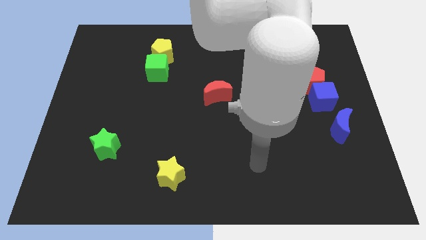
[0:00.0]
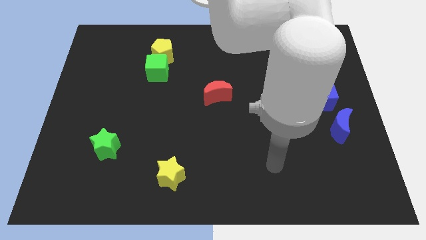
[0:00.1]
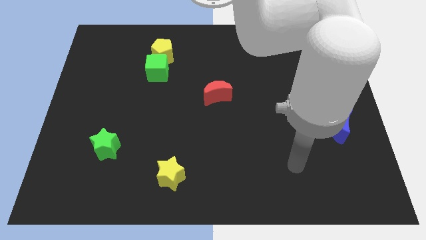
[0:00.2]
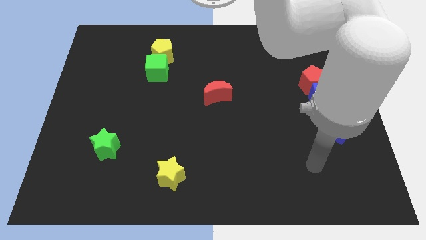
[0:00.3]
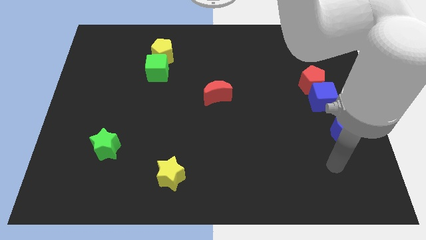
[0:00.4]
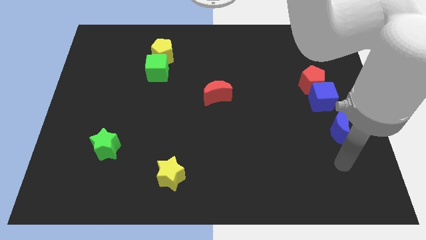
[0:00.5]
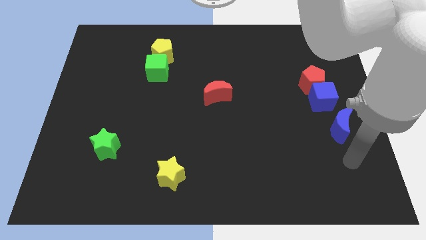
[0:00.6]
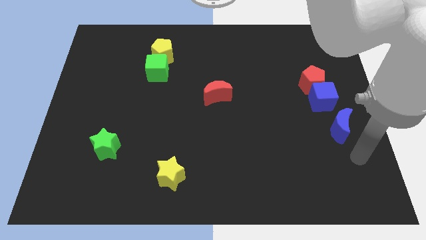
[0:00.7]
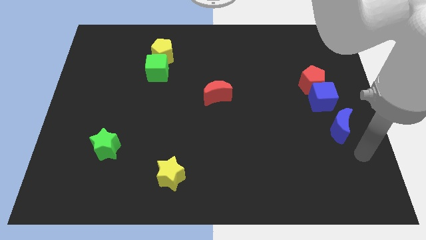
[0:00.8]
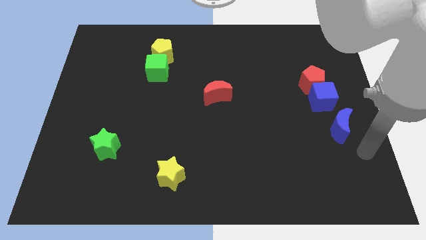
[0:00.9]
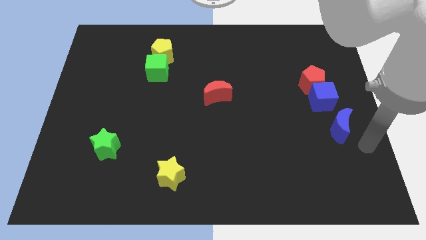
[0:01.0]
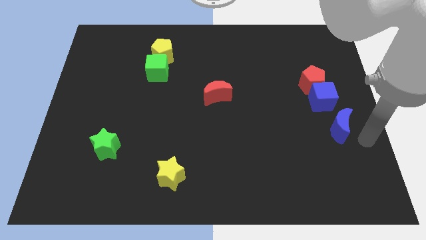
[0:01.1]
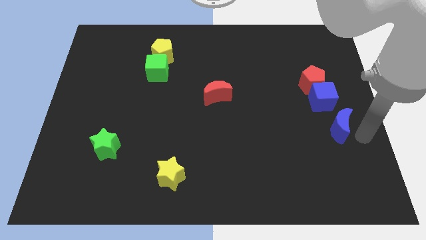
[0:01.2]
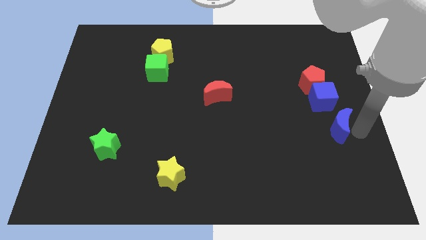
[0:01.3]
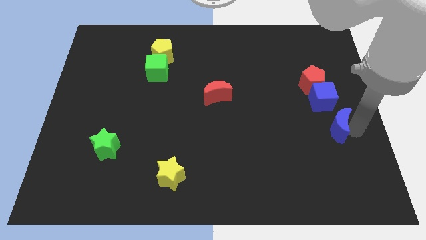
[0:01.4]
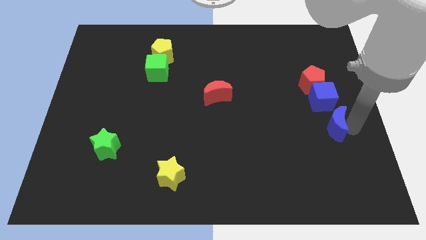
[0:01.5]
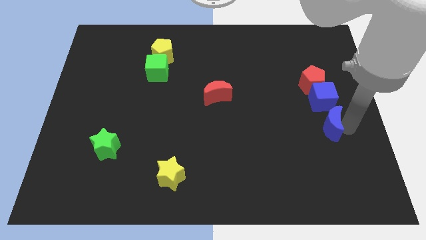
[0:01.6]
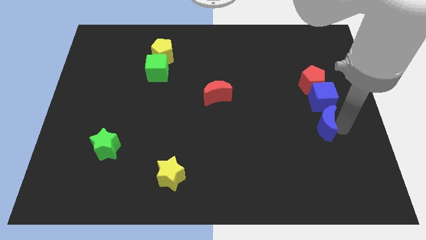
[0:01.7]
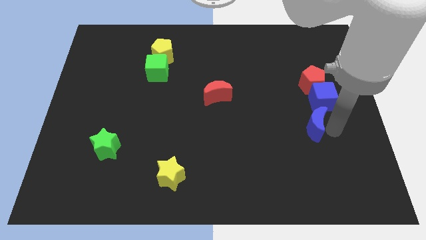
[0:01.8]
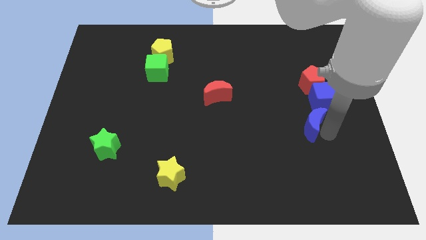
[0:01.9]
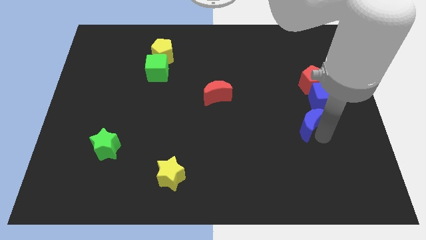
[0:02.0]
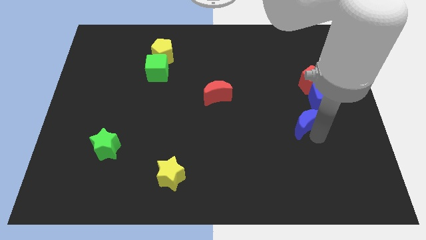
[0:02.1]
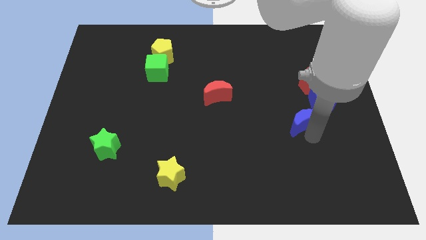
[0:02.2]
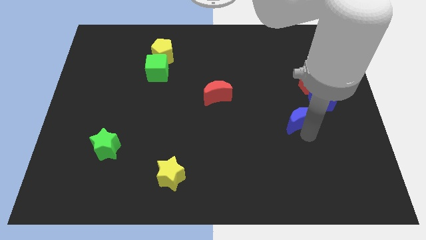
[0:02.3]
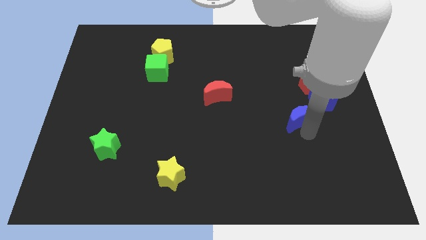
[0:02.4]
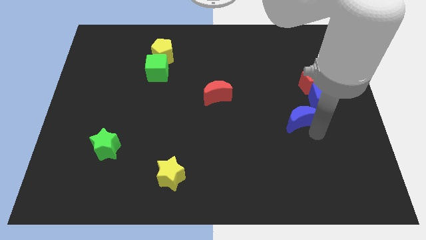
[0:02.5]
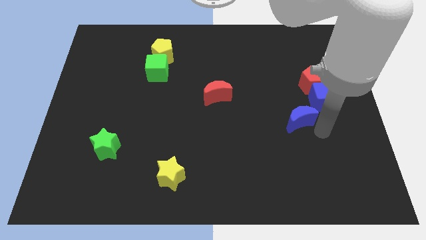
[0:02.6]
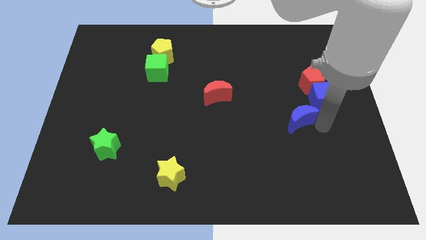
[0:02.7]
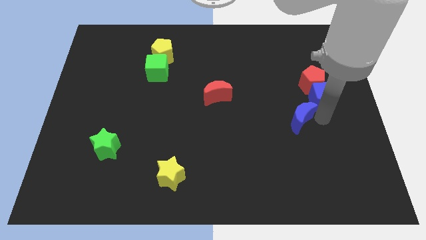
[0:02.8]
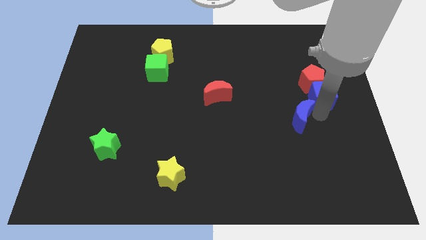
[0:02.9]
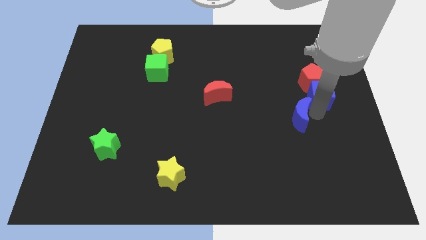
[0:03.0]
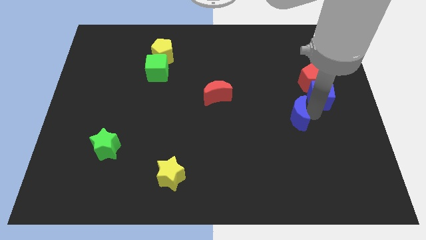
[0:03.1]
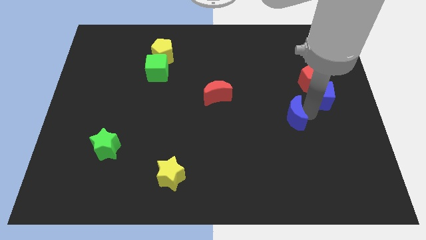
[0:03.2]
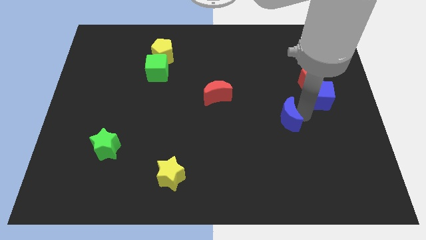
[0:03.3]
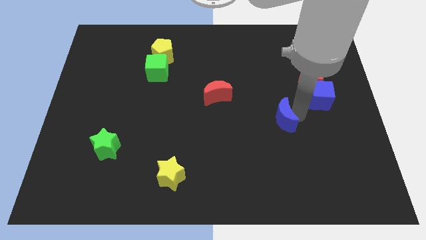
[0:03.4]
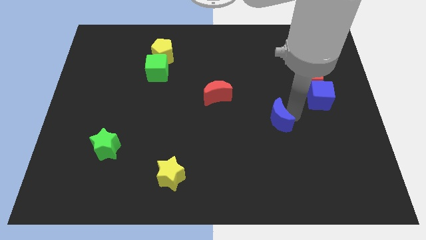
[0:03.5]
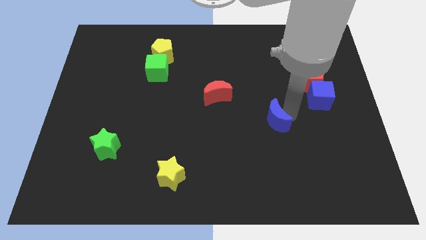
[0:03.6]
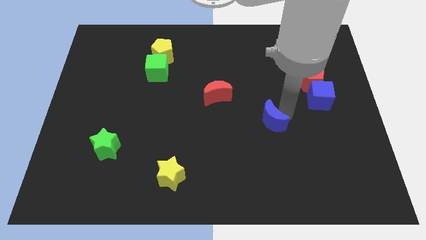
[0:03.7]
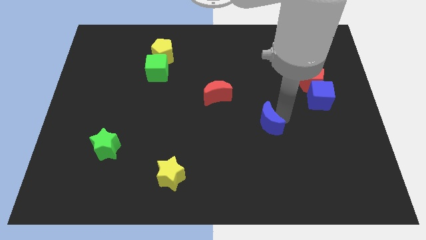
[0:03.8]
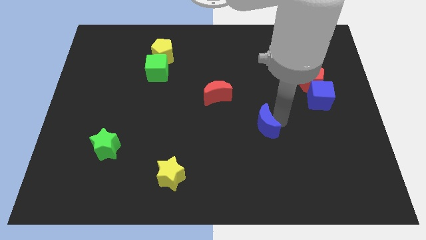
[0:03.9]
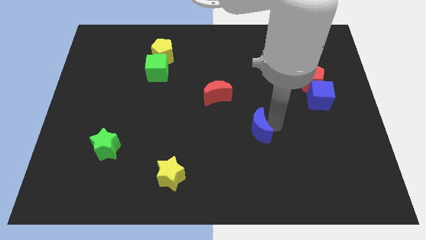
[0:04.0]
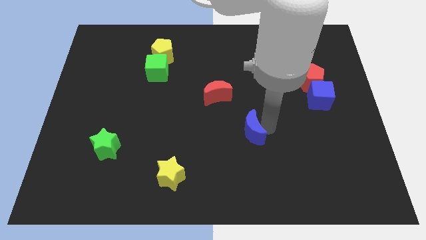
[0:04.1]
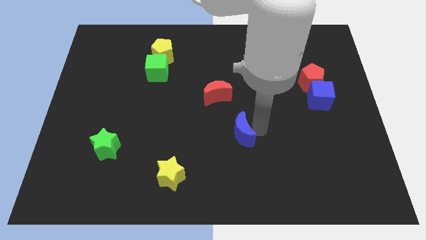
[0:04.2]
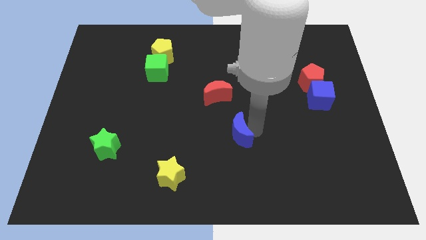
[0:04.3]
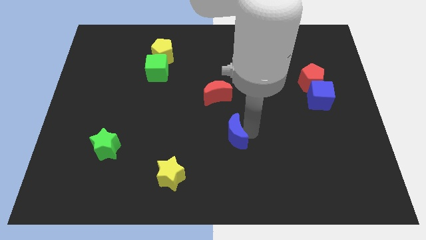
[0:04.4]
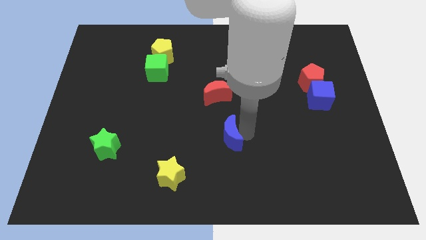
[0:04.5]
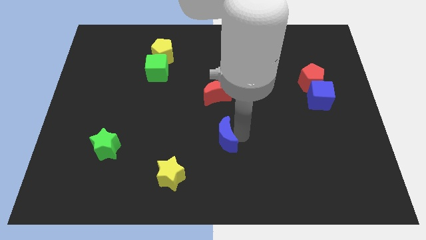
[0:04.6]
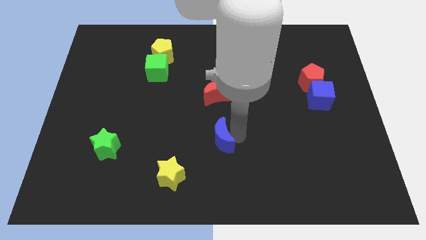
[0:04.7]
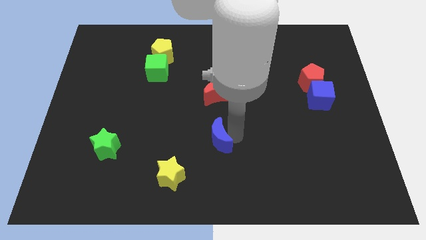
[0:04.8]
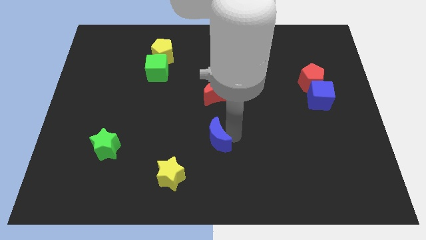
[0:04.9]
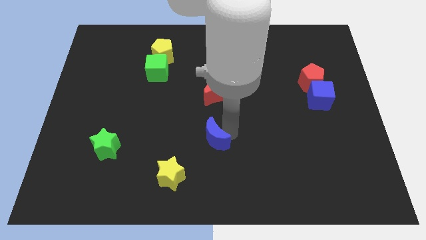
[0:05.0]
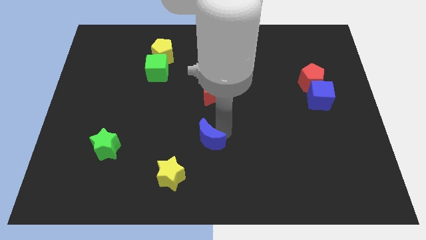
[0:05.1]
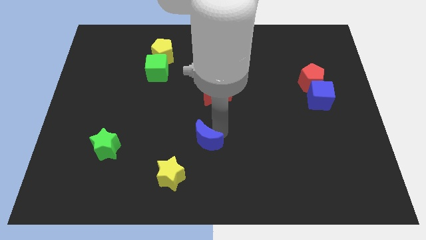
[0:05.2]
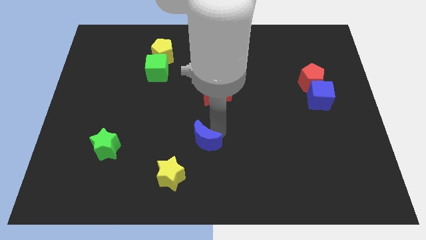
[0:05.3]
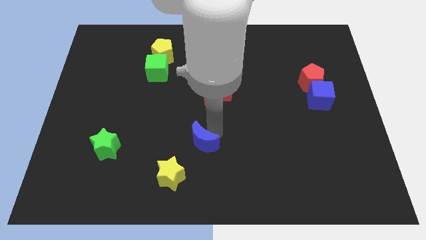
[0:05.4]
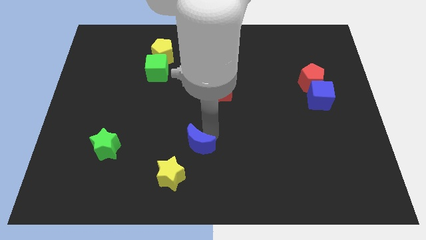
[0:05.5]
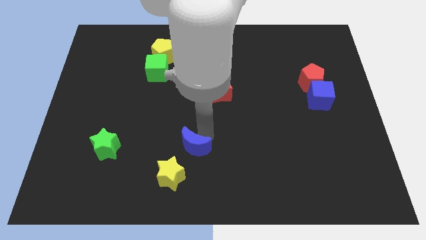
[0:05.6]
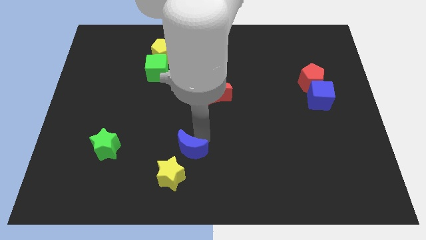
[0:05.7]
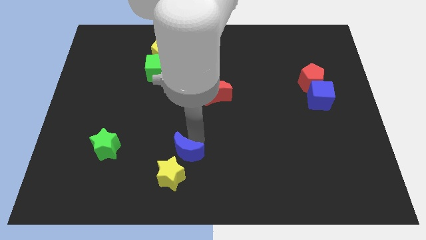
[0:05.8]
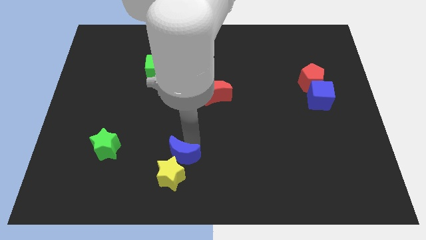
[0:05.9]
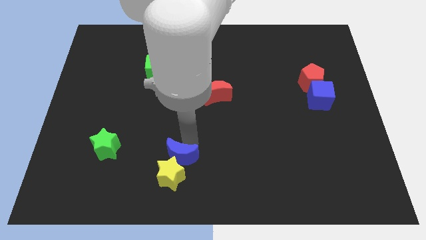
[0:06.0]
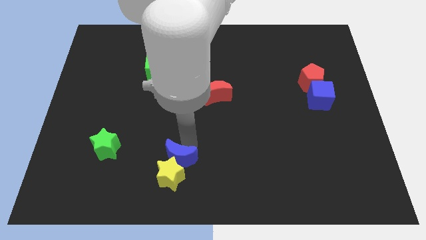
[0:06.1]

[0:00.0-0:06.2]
push the blue moon towards the yellow star

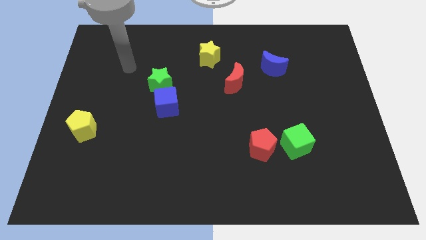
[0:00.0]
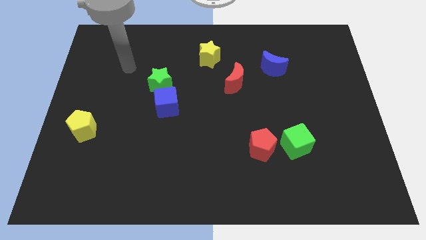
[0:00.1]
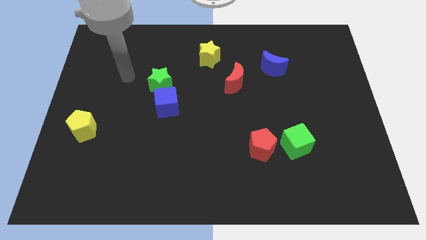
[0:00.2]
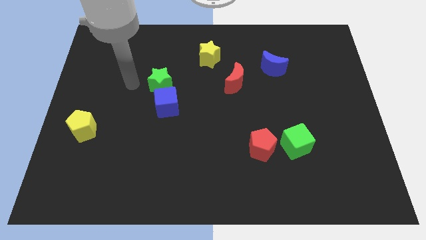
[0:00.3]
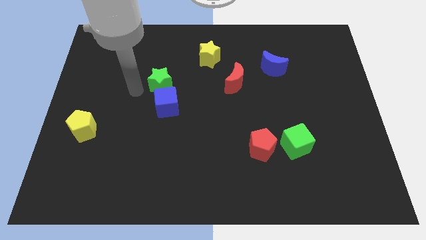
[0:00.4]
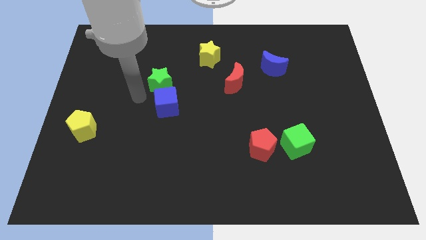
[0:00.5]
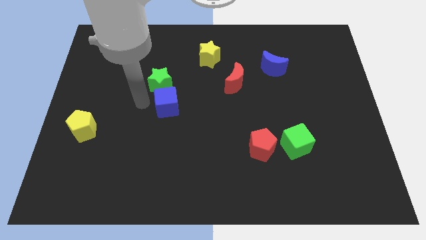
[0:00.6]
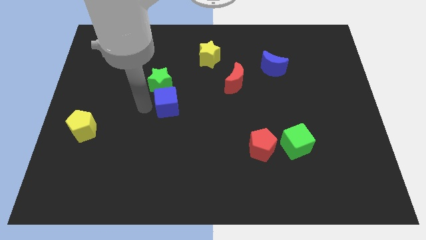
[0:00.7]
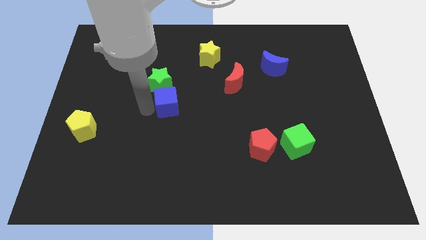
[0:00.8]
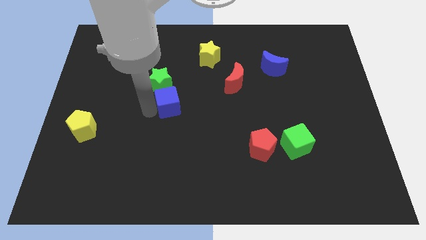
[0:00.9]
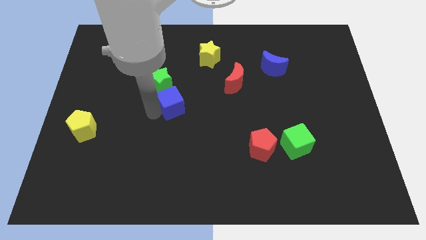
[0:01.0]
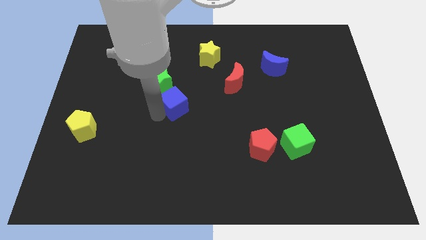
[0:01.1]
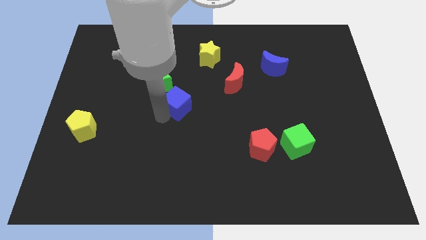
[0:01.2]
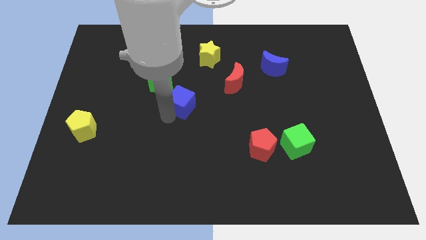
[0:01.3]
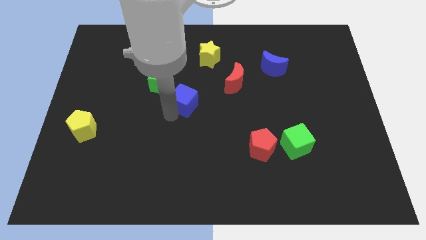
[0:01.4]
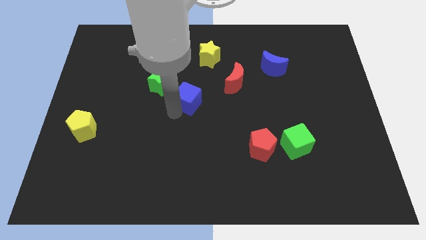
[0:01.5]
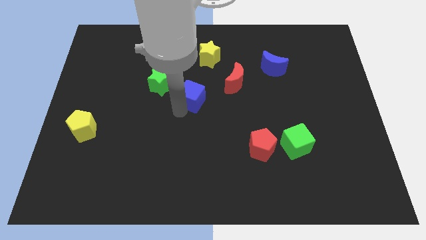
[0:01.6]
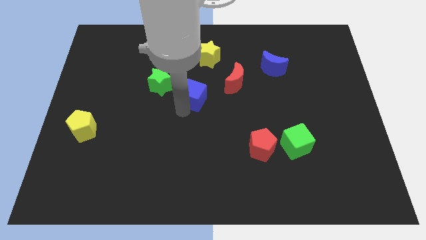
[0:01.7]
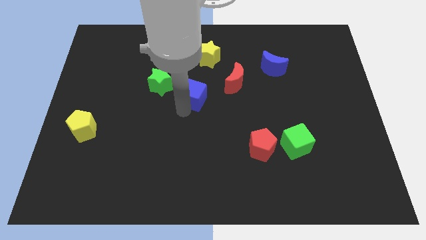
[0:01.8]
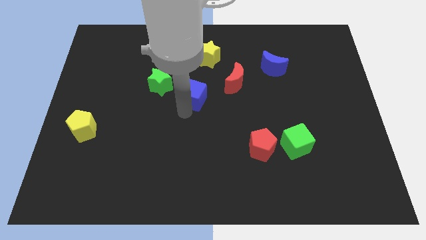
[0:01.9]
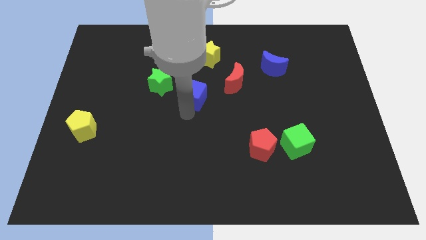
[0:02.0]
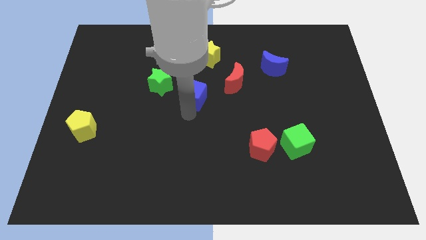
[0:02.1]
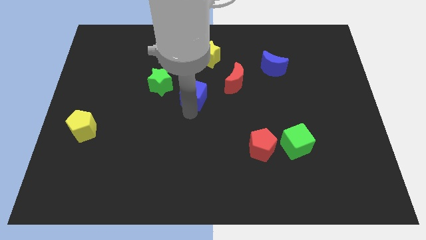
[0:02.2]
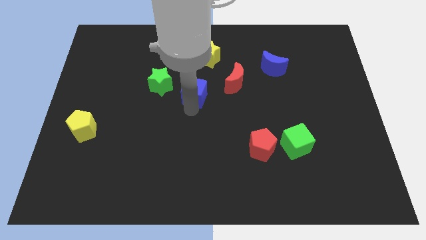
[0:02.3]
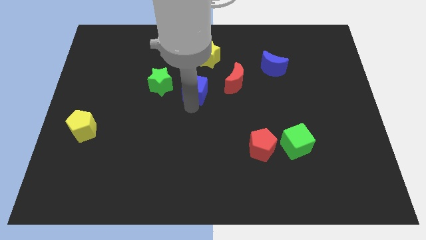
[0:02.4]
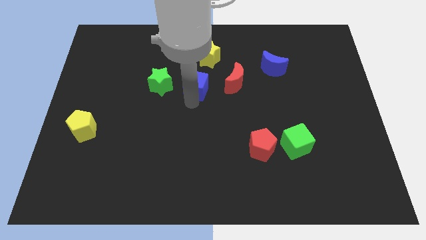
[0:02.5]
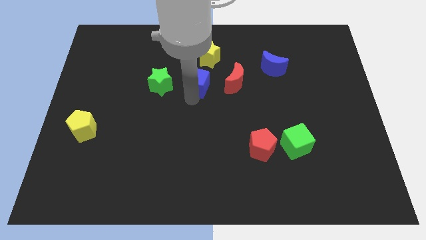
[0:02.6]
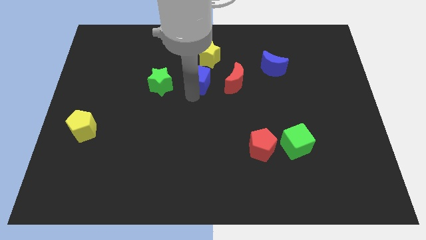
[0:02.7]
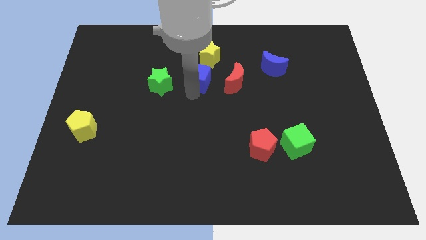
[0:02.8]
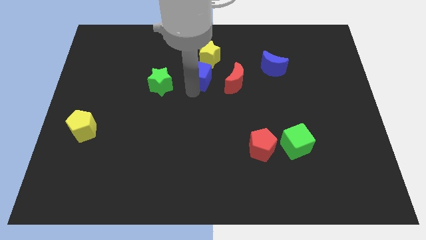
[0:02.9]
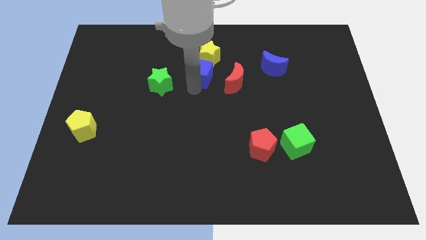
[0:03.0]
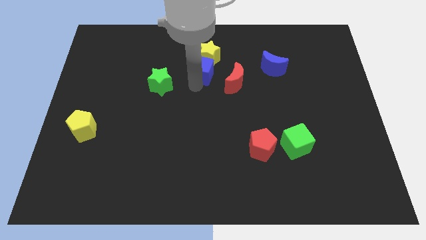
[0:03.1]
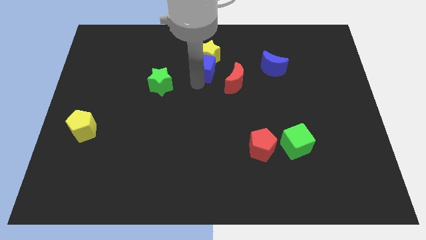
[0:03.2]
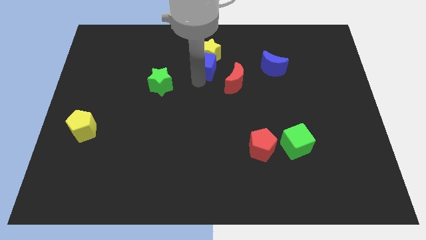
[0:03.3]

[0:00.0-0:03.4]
push the blue cube towards the yellow star
